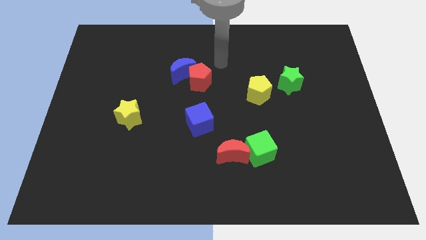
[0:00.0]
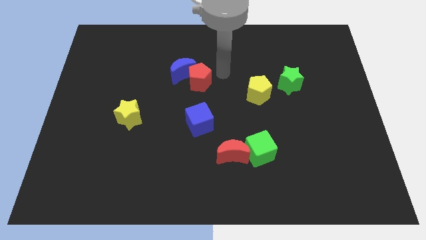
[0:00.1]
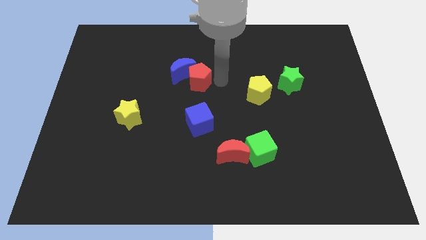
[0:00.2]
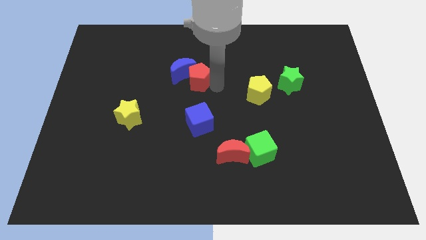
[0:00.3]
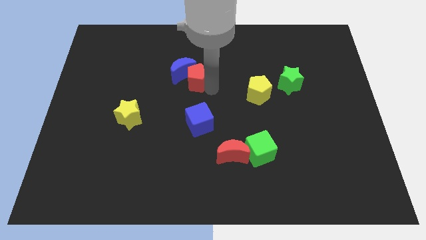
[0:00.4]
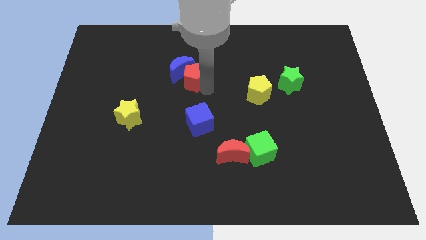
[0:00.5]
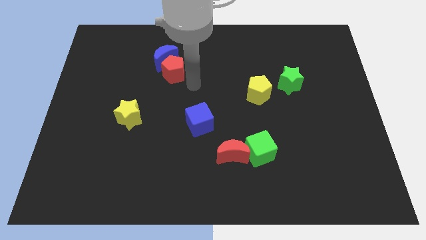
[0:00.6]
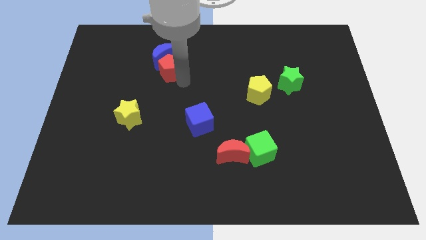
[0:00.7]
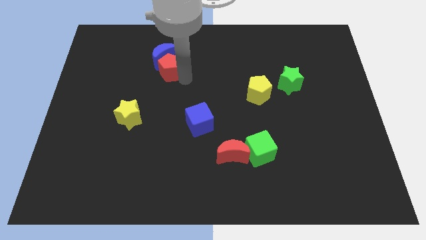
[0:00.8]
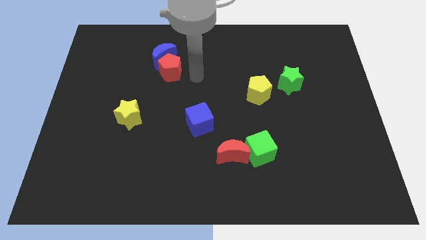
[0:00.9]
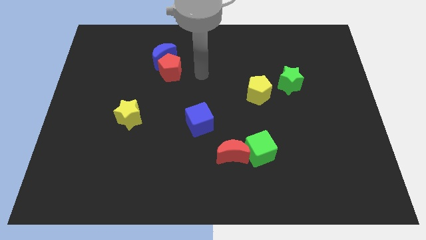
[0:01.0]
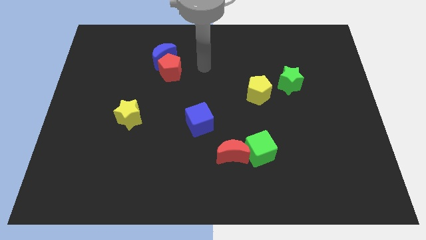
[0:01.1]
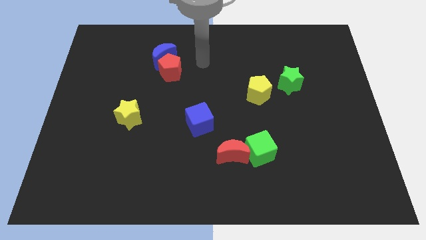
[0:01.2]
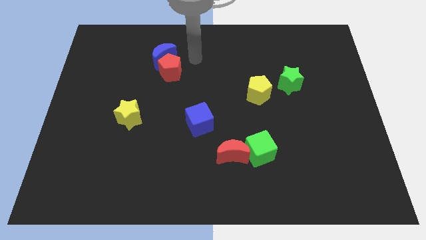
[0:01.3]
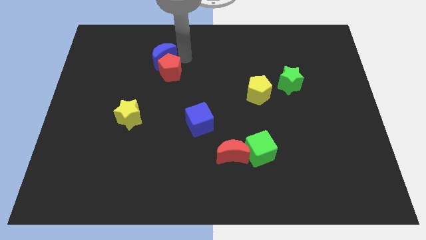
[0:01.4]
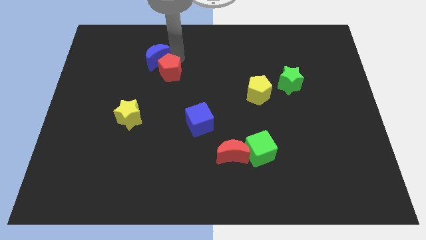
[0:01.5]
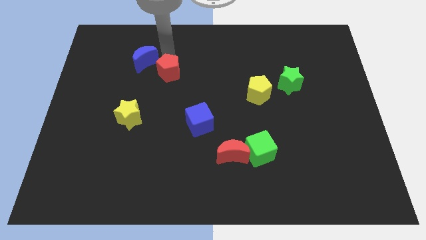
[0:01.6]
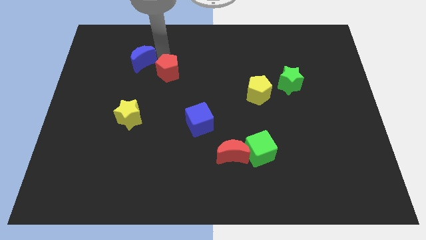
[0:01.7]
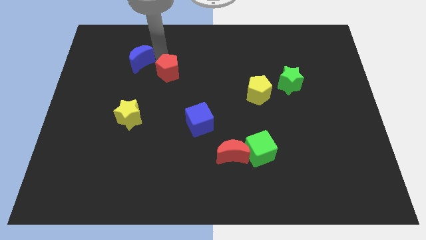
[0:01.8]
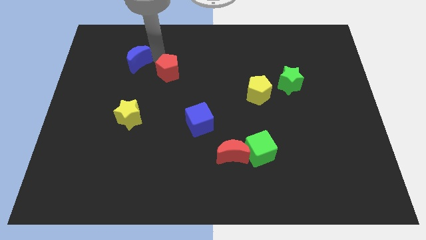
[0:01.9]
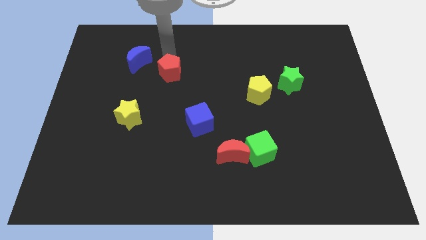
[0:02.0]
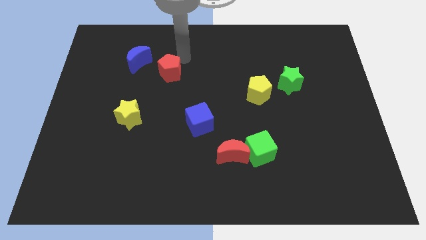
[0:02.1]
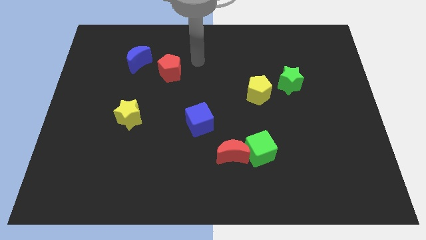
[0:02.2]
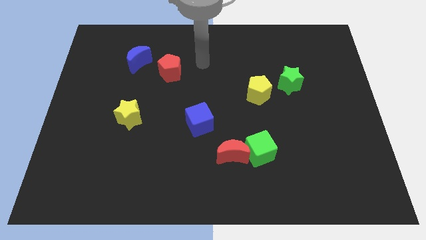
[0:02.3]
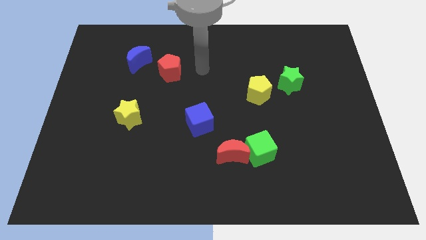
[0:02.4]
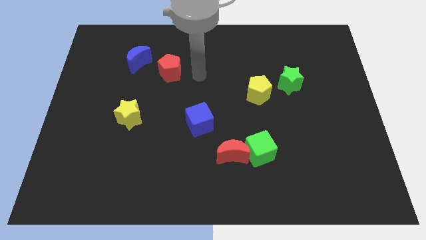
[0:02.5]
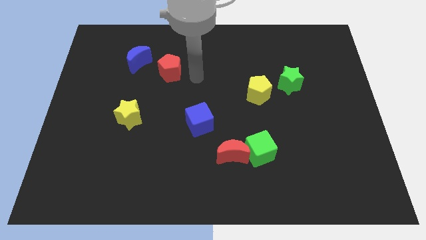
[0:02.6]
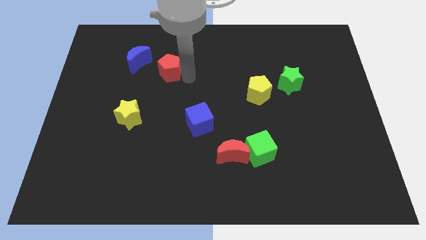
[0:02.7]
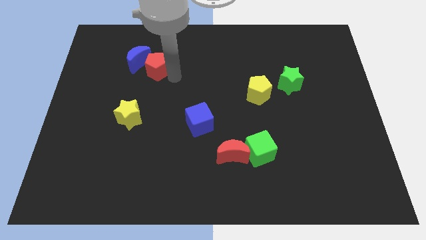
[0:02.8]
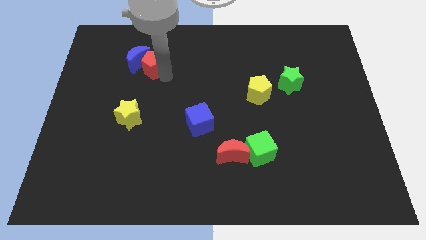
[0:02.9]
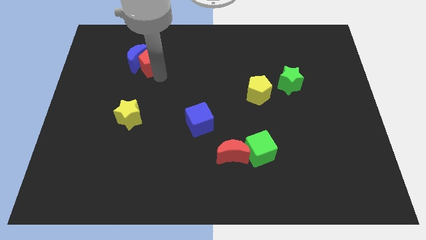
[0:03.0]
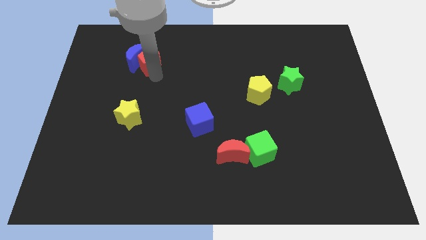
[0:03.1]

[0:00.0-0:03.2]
push red pentagon into blue crescent

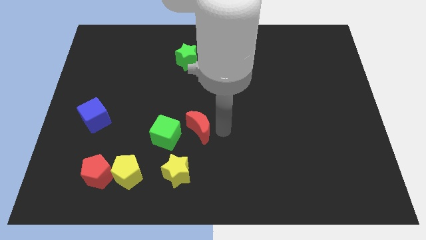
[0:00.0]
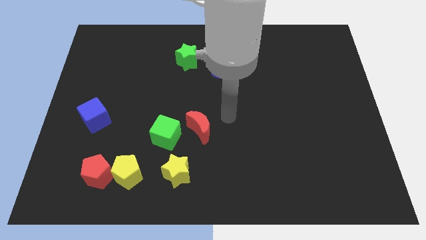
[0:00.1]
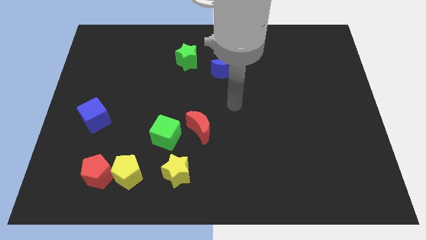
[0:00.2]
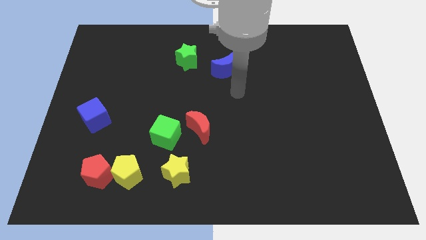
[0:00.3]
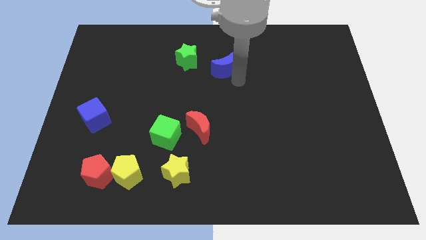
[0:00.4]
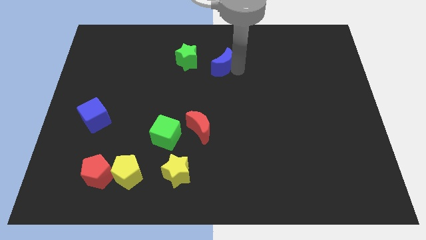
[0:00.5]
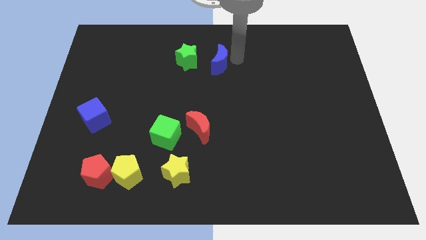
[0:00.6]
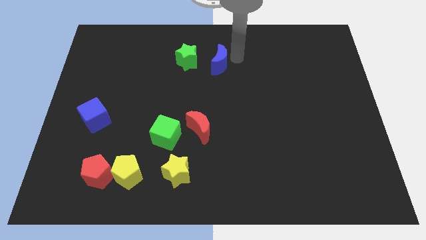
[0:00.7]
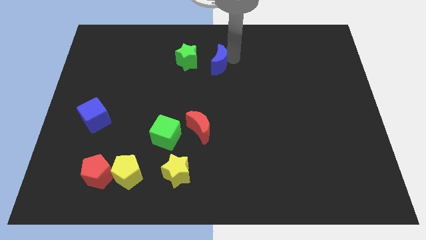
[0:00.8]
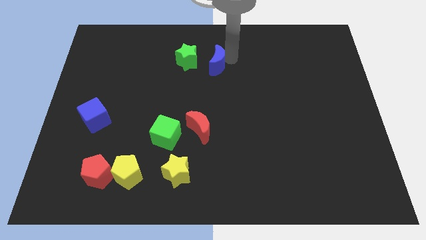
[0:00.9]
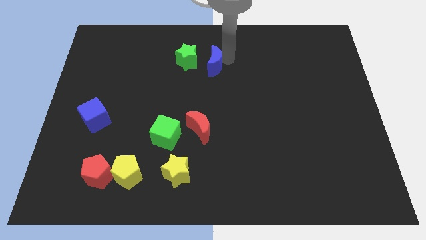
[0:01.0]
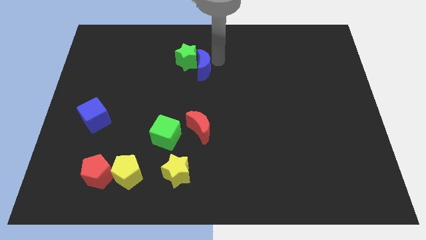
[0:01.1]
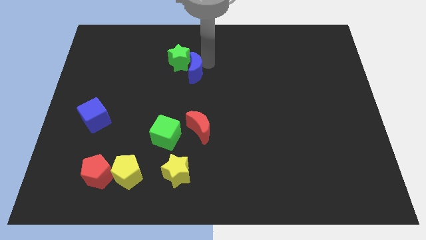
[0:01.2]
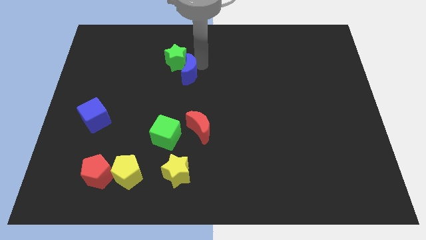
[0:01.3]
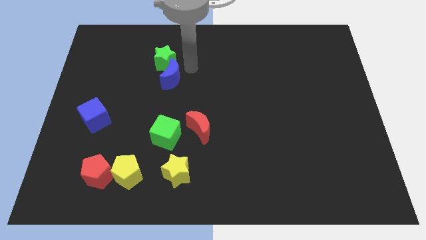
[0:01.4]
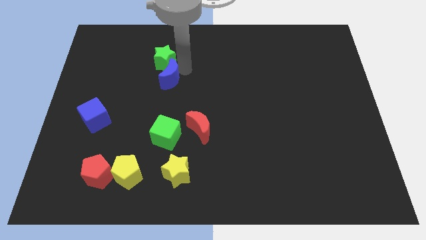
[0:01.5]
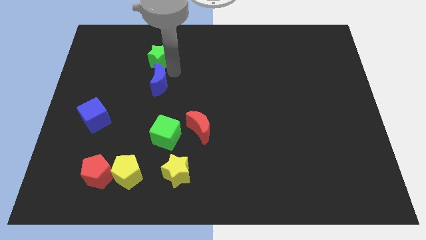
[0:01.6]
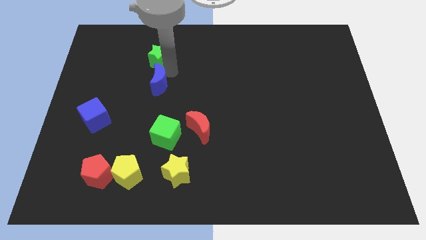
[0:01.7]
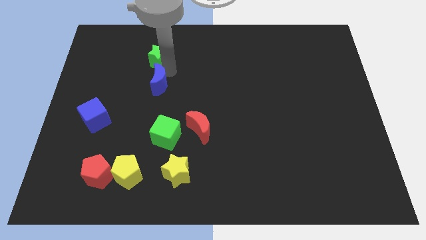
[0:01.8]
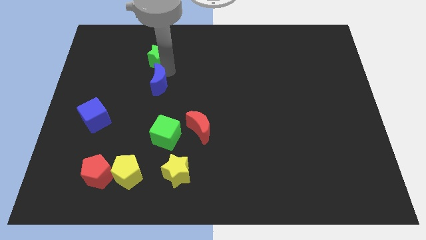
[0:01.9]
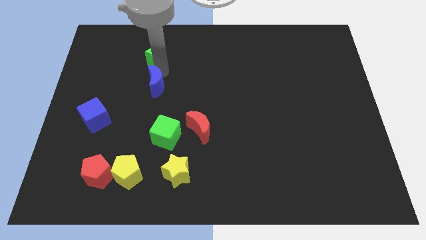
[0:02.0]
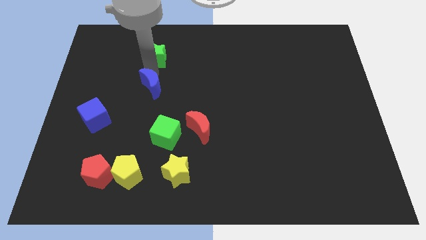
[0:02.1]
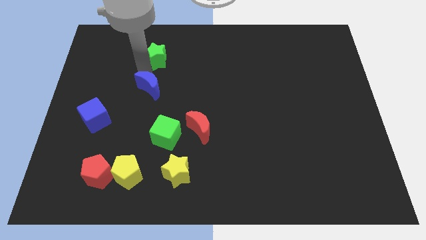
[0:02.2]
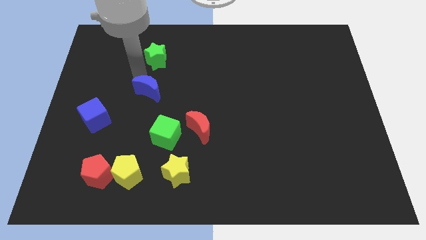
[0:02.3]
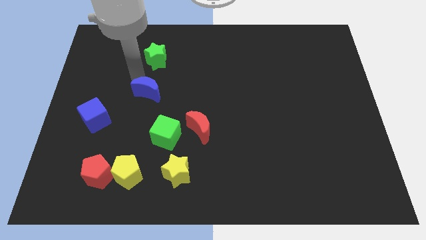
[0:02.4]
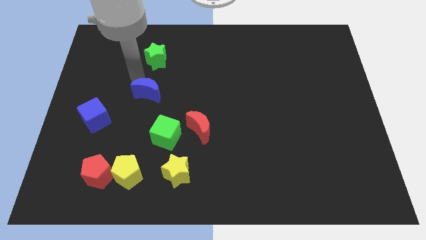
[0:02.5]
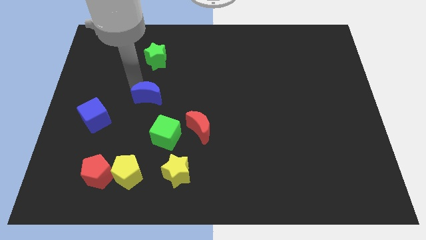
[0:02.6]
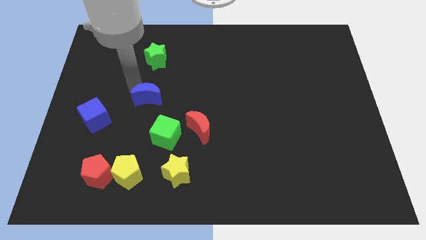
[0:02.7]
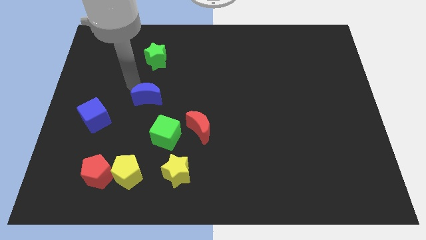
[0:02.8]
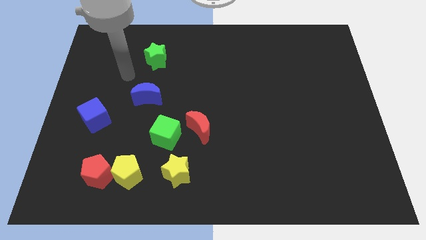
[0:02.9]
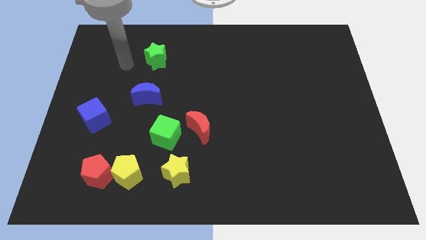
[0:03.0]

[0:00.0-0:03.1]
push the blue crescent to the top of green cube

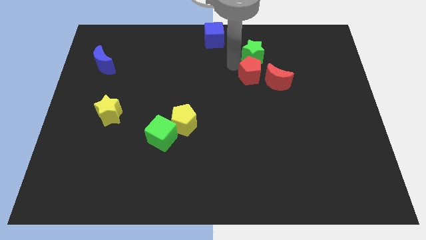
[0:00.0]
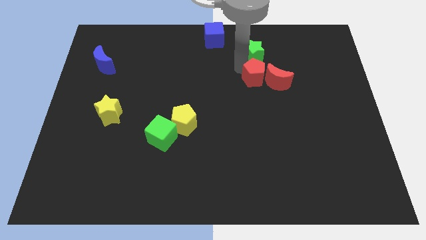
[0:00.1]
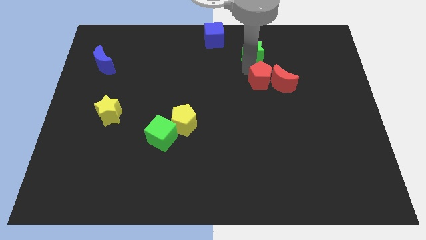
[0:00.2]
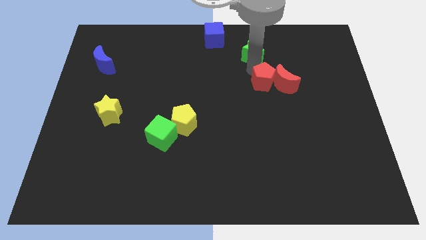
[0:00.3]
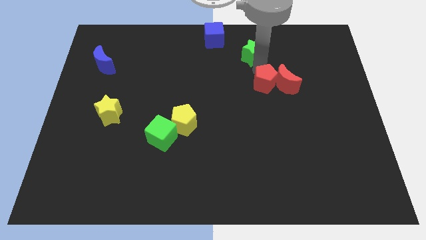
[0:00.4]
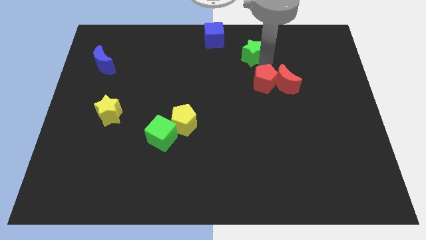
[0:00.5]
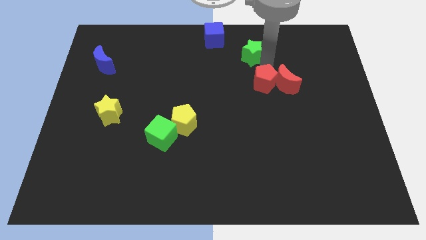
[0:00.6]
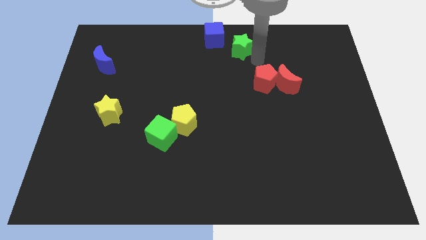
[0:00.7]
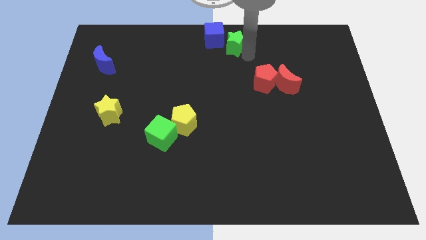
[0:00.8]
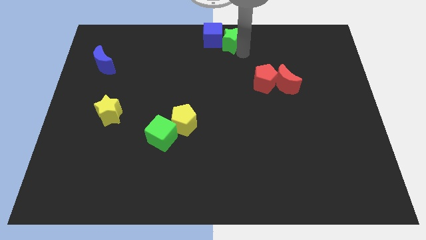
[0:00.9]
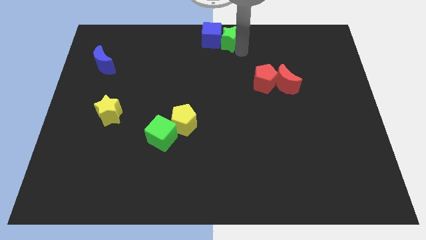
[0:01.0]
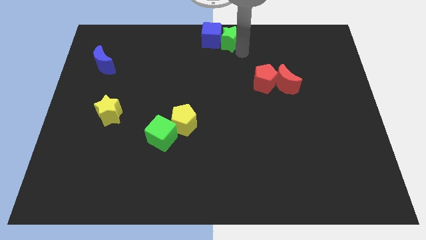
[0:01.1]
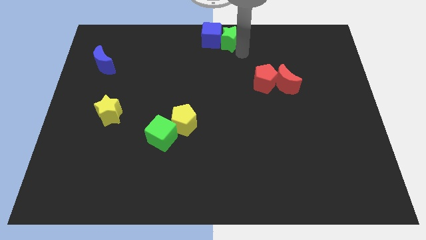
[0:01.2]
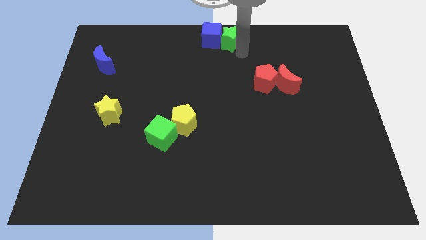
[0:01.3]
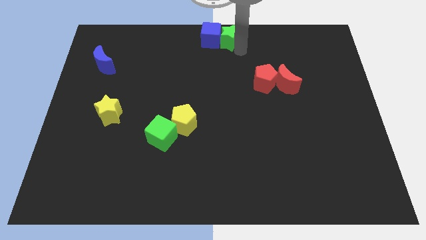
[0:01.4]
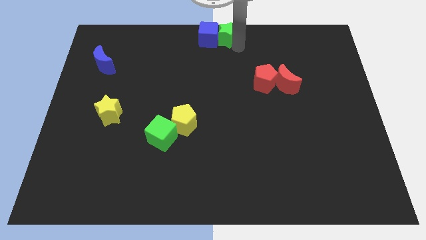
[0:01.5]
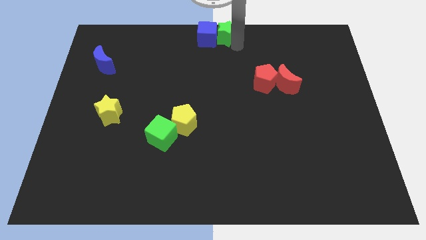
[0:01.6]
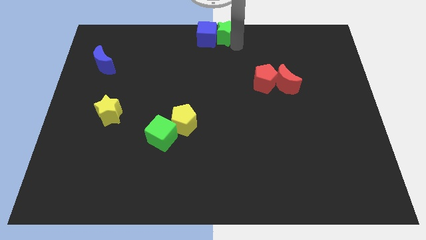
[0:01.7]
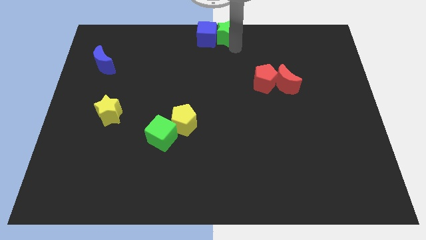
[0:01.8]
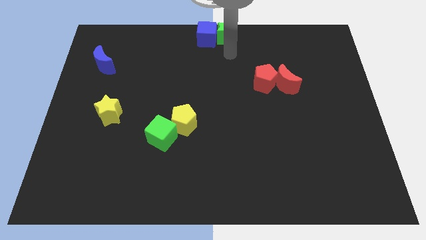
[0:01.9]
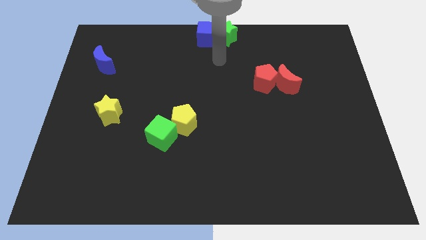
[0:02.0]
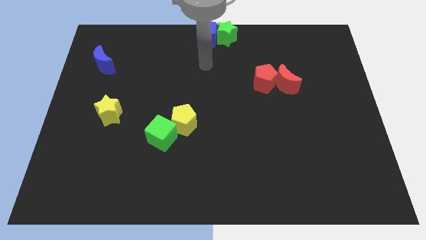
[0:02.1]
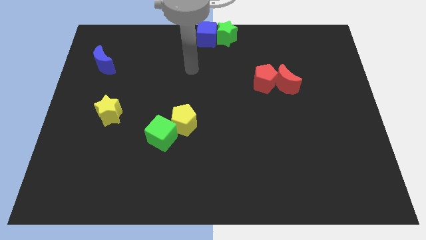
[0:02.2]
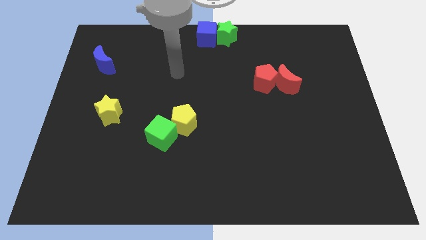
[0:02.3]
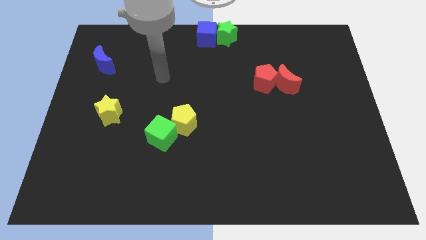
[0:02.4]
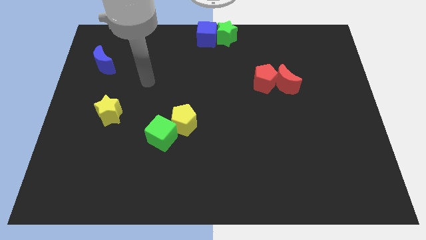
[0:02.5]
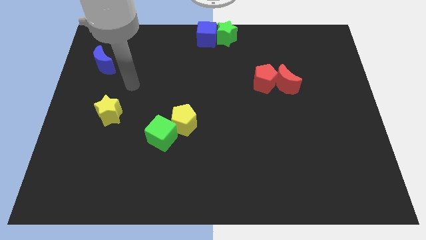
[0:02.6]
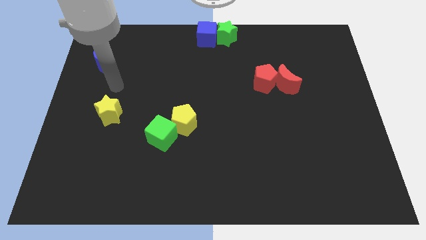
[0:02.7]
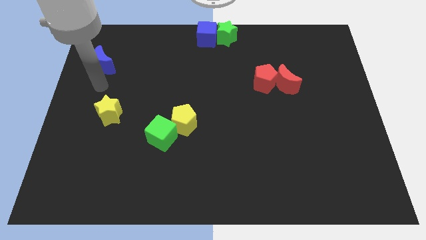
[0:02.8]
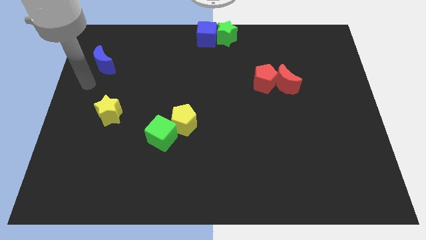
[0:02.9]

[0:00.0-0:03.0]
place the green star at the right of the blue cube
